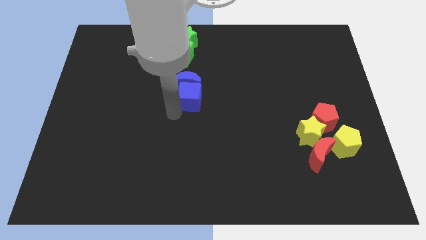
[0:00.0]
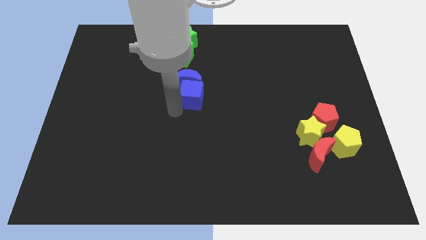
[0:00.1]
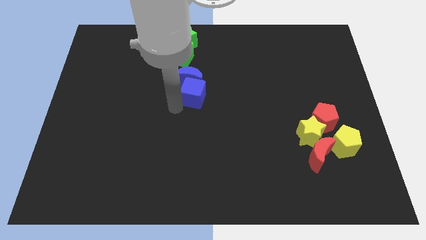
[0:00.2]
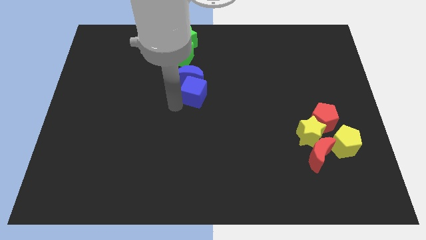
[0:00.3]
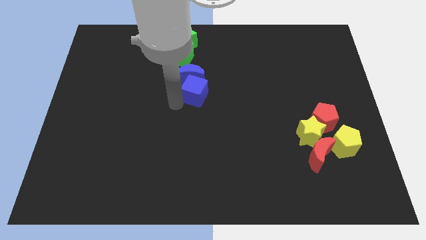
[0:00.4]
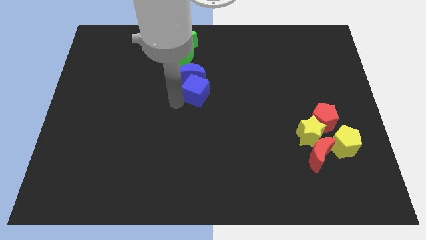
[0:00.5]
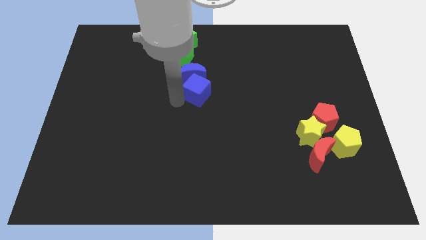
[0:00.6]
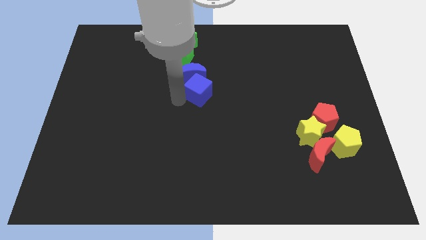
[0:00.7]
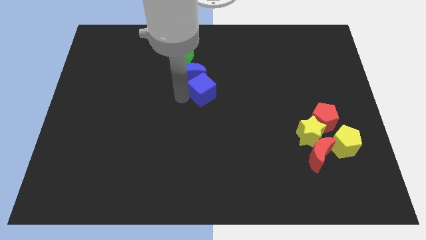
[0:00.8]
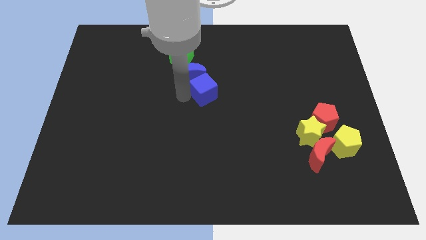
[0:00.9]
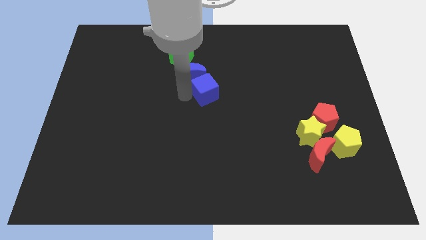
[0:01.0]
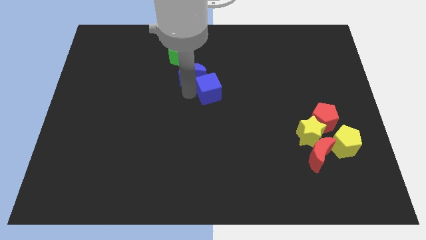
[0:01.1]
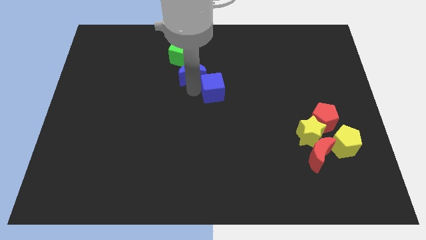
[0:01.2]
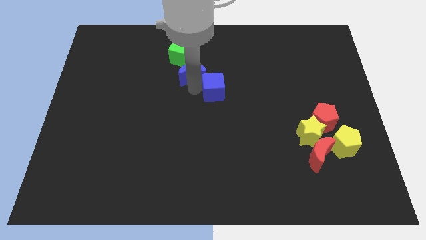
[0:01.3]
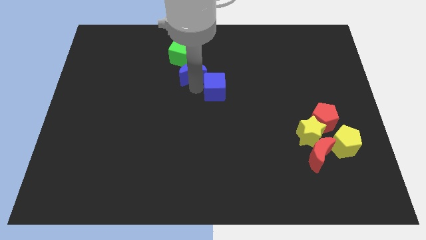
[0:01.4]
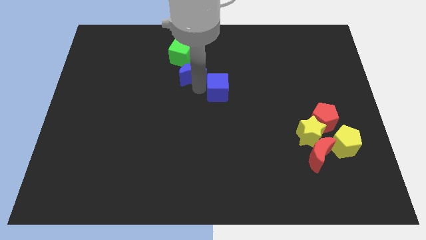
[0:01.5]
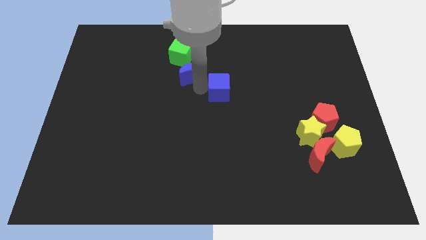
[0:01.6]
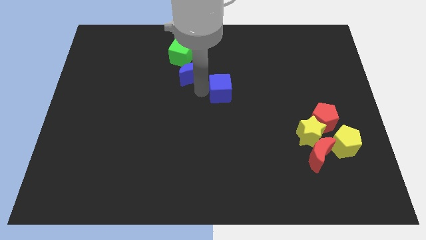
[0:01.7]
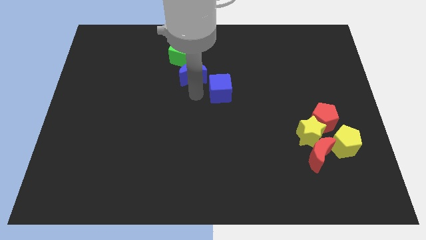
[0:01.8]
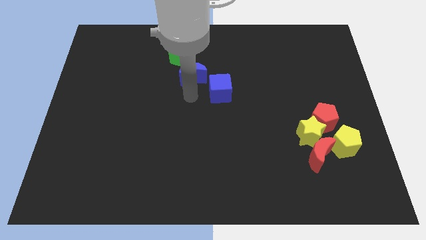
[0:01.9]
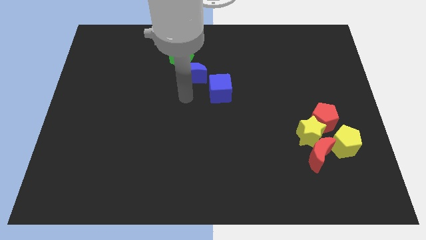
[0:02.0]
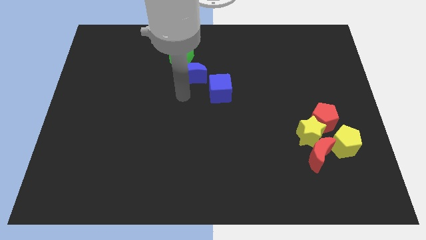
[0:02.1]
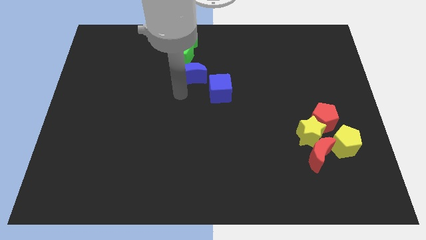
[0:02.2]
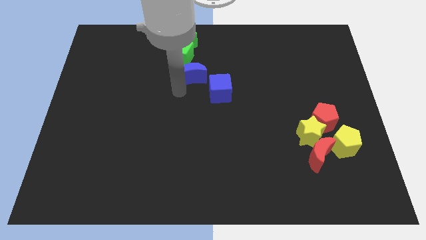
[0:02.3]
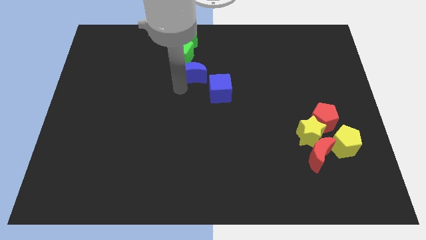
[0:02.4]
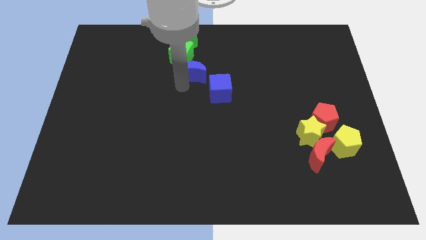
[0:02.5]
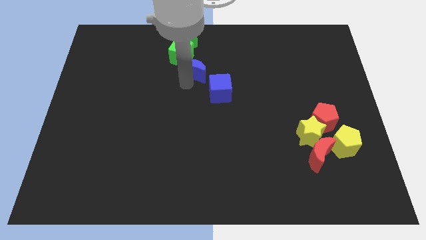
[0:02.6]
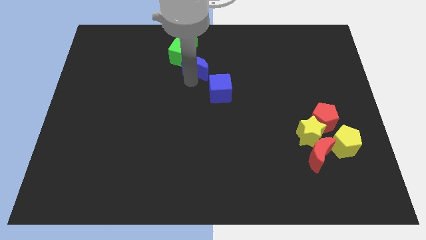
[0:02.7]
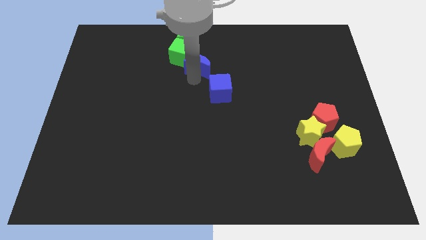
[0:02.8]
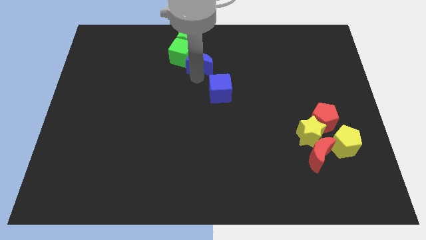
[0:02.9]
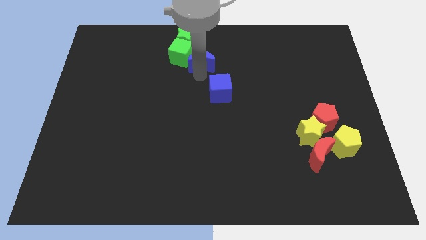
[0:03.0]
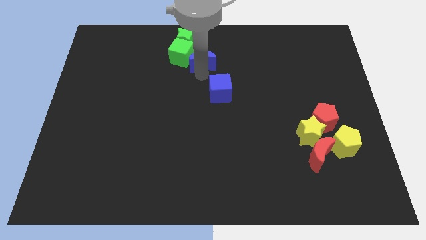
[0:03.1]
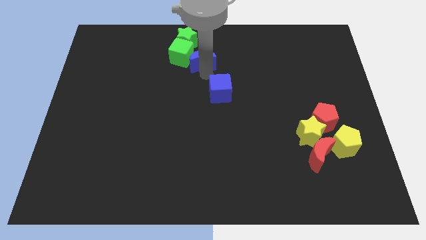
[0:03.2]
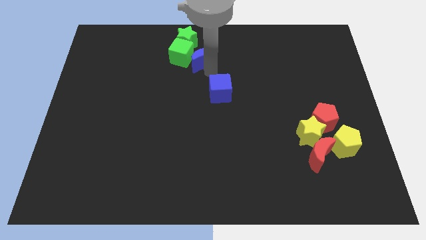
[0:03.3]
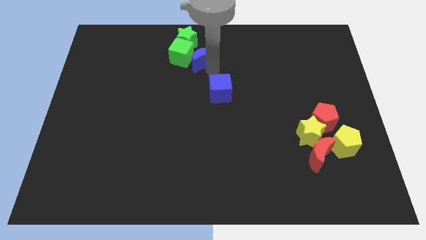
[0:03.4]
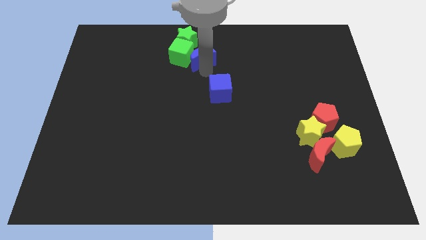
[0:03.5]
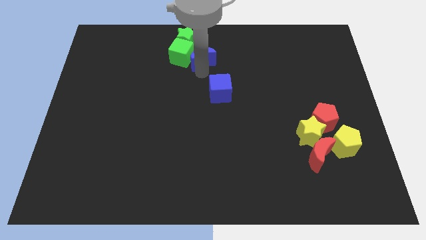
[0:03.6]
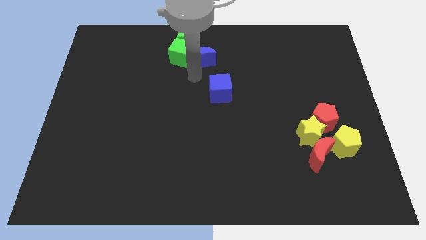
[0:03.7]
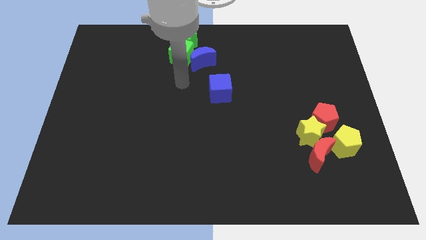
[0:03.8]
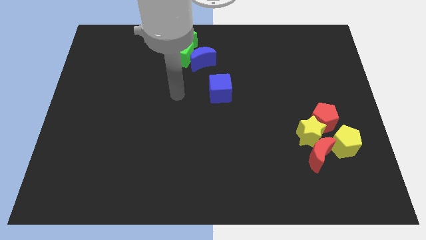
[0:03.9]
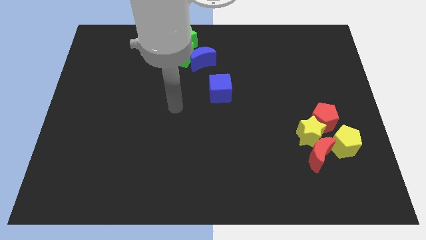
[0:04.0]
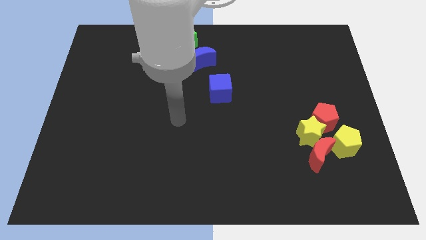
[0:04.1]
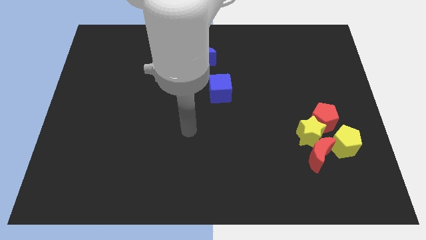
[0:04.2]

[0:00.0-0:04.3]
separate blue moon and blue cube

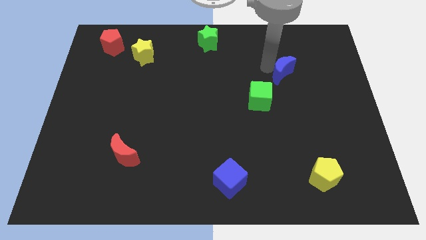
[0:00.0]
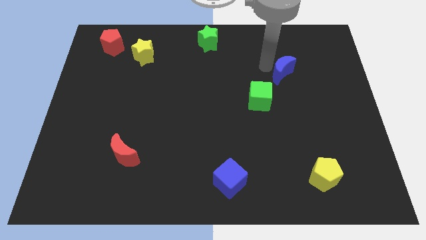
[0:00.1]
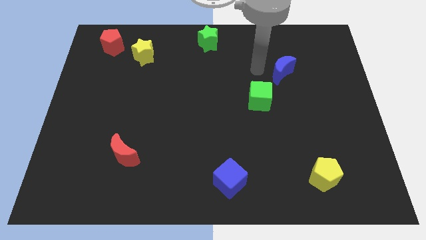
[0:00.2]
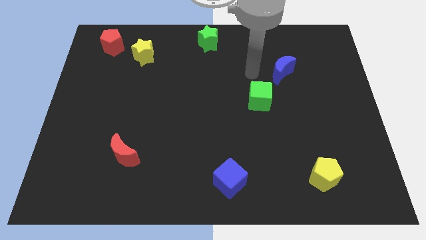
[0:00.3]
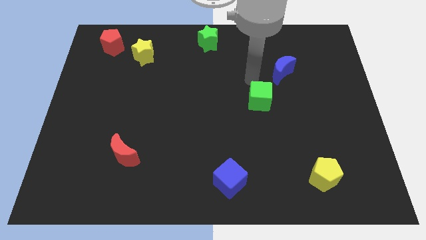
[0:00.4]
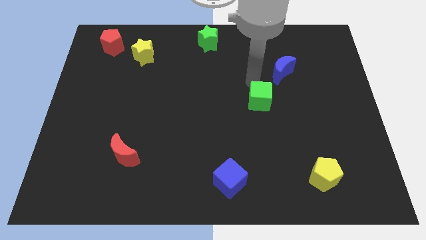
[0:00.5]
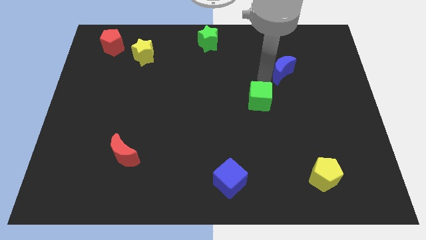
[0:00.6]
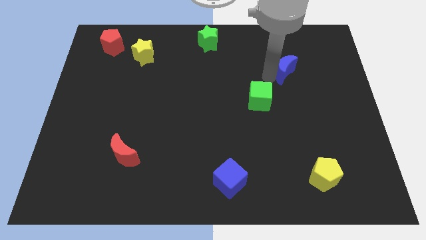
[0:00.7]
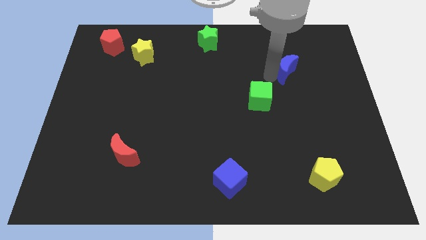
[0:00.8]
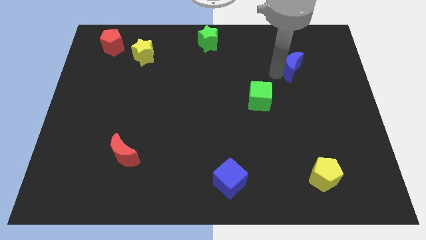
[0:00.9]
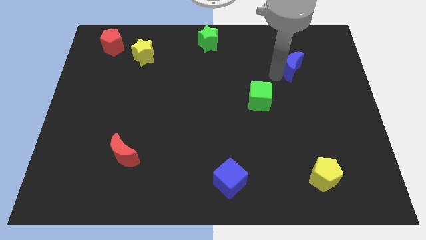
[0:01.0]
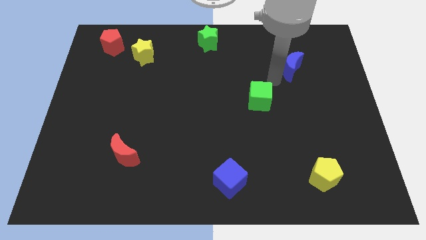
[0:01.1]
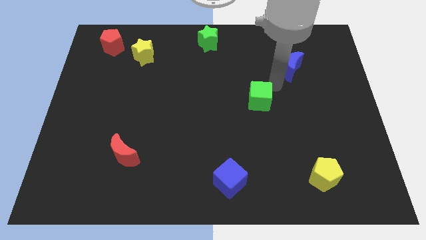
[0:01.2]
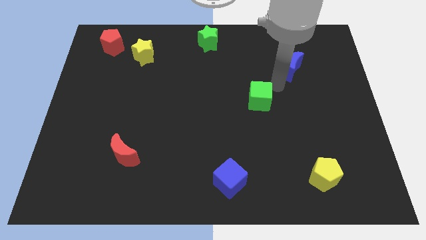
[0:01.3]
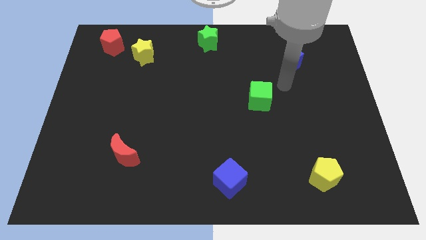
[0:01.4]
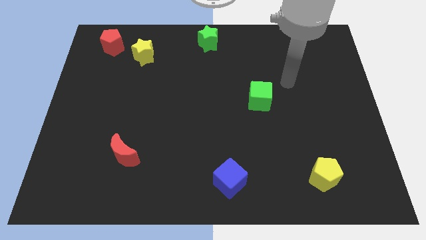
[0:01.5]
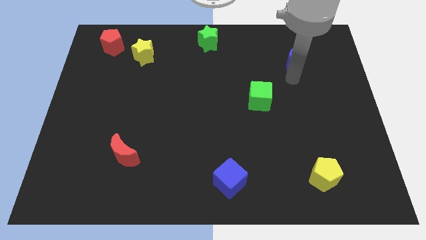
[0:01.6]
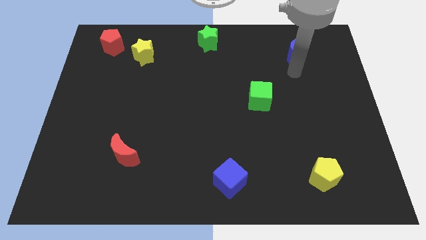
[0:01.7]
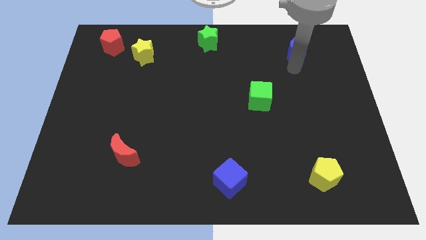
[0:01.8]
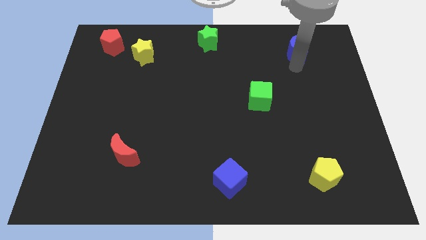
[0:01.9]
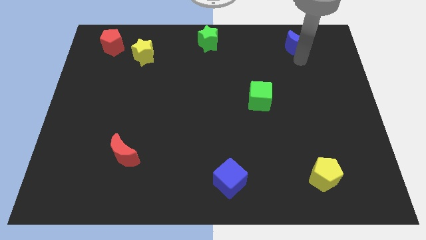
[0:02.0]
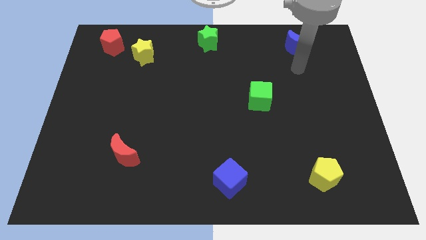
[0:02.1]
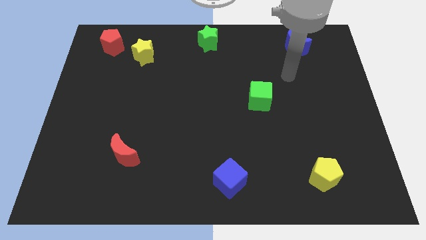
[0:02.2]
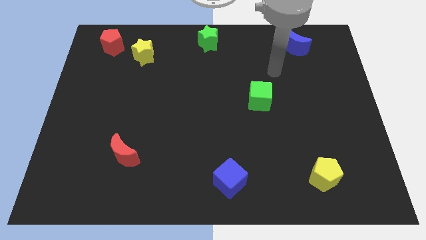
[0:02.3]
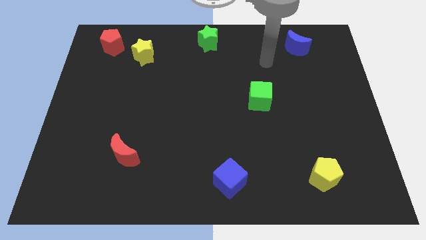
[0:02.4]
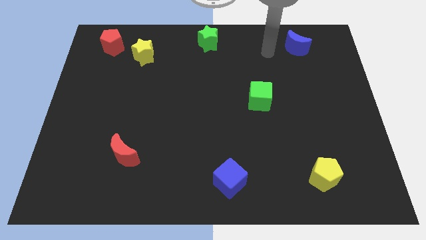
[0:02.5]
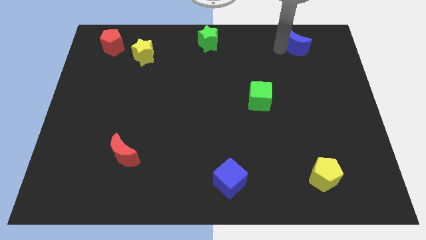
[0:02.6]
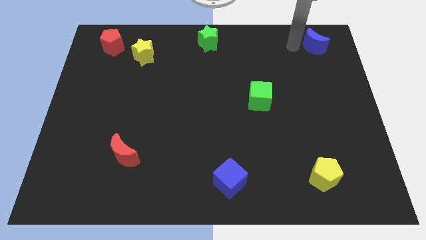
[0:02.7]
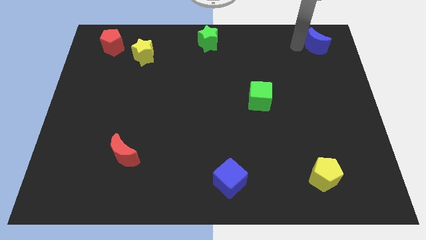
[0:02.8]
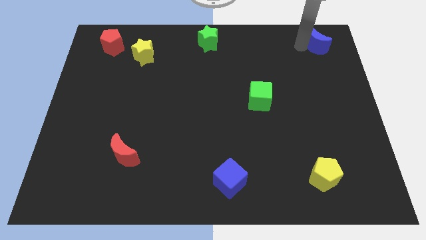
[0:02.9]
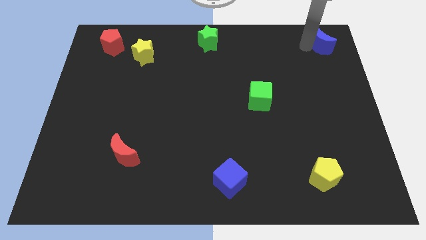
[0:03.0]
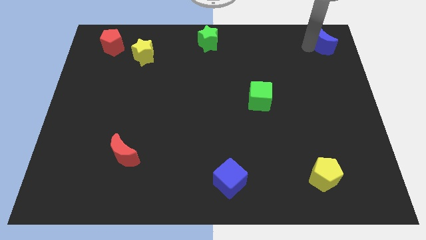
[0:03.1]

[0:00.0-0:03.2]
move the blue moon towards the top right side of the board

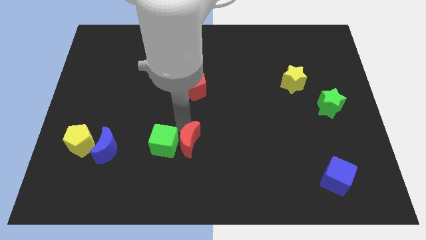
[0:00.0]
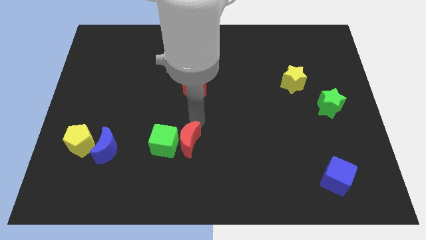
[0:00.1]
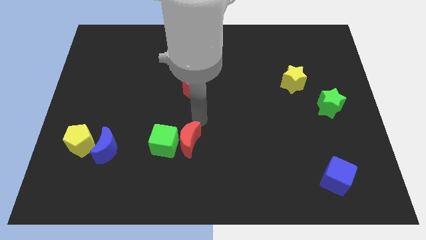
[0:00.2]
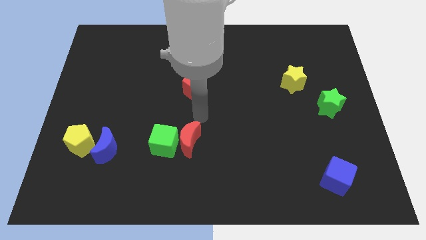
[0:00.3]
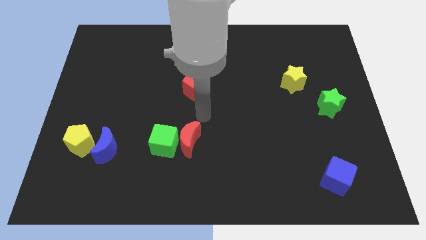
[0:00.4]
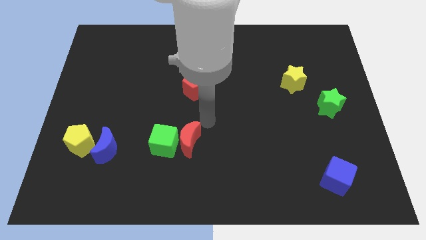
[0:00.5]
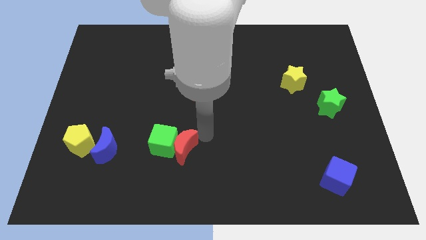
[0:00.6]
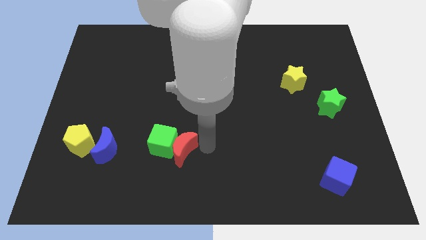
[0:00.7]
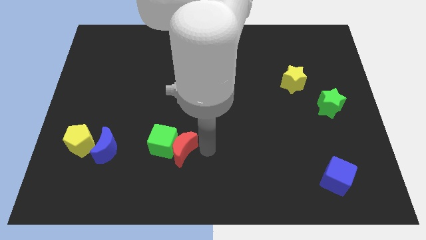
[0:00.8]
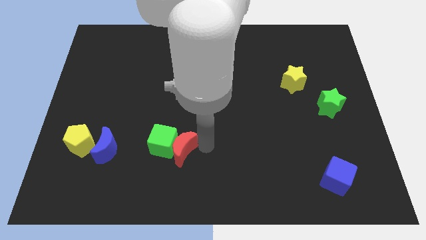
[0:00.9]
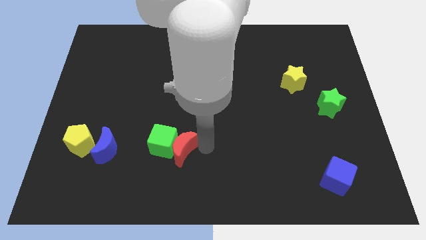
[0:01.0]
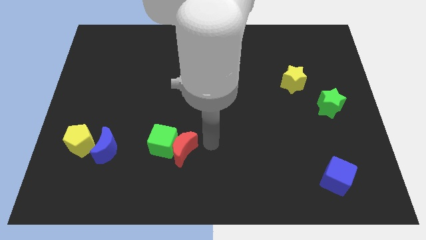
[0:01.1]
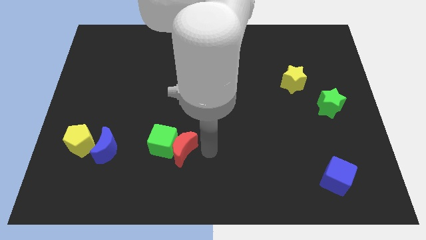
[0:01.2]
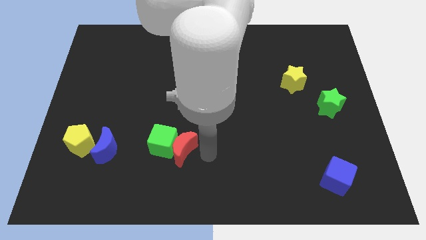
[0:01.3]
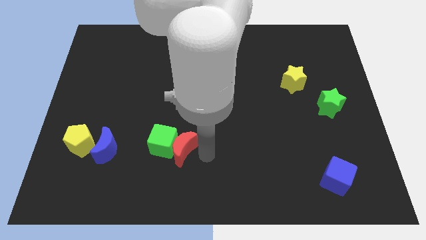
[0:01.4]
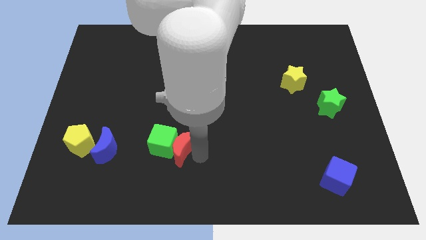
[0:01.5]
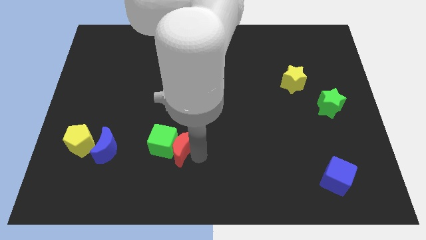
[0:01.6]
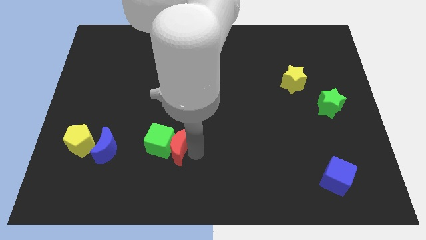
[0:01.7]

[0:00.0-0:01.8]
move red moon slightly down
